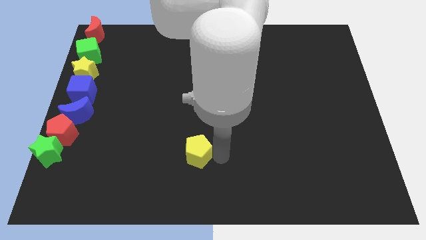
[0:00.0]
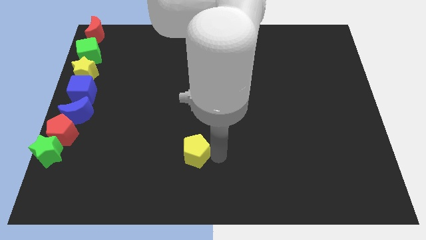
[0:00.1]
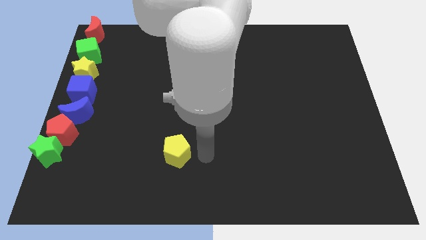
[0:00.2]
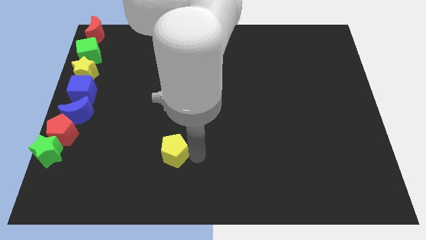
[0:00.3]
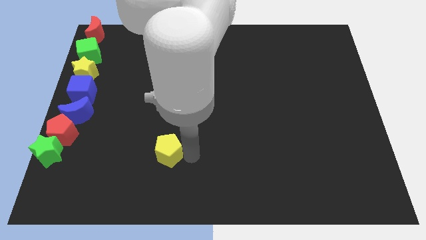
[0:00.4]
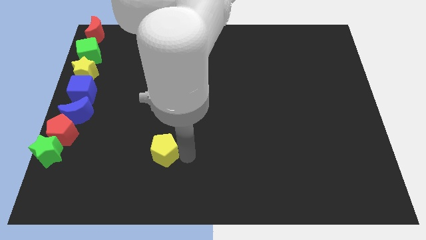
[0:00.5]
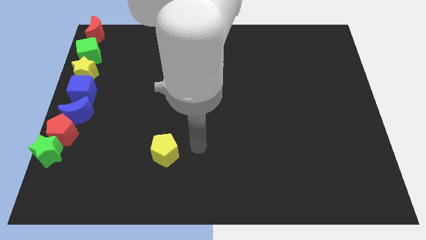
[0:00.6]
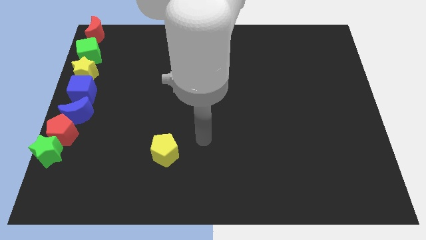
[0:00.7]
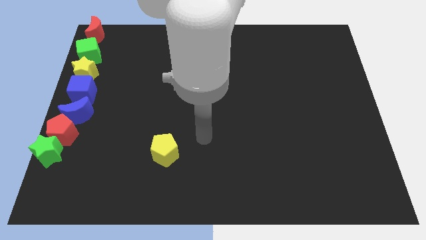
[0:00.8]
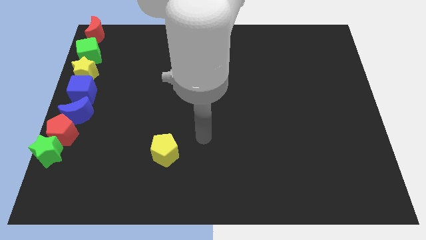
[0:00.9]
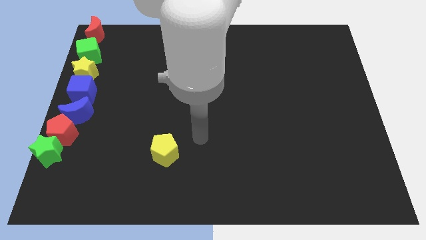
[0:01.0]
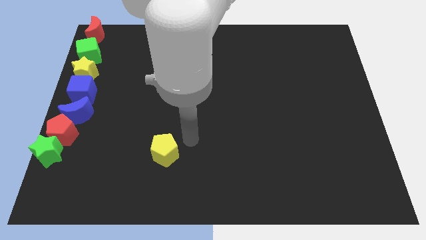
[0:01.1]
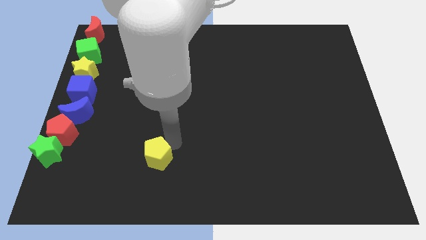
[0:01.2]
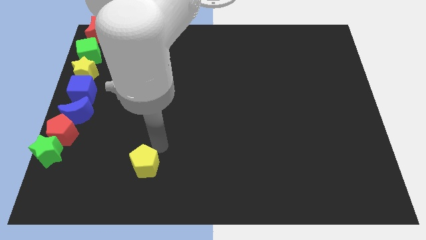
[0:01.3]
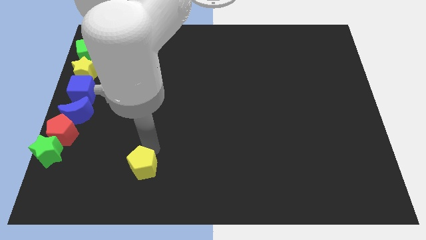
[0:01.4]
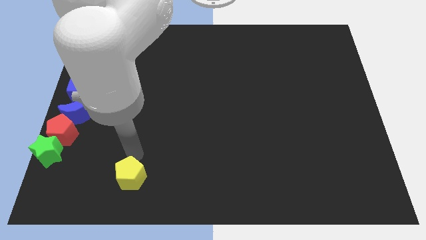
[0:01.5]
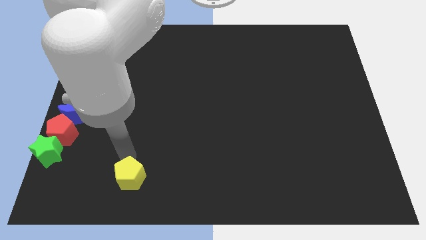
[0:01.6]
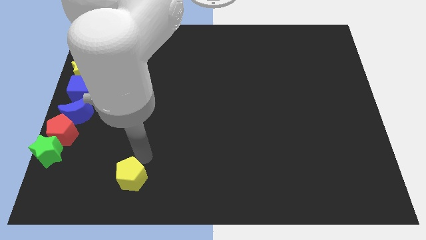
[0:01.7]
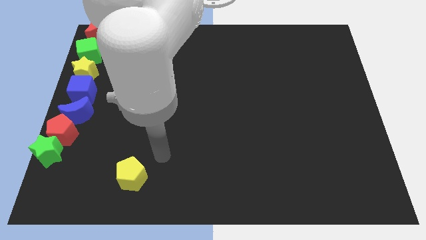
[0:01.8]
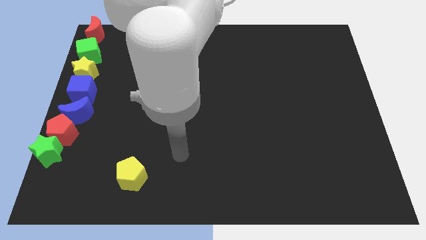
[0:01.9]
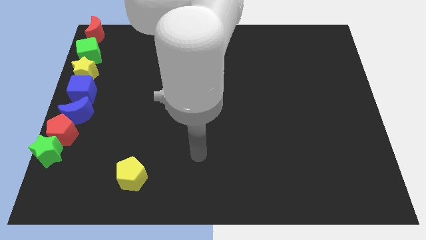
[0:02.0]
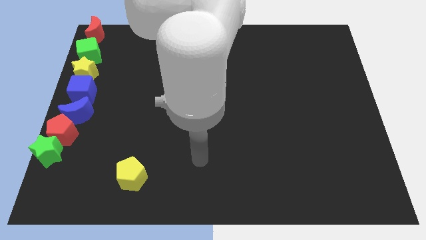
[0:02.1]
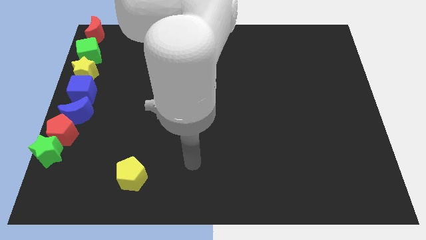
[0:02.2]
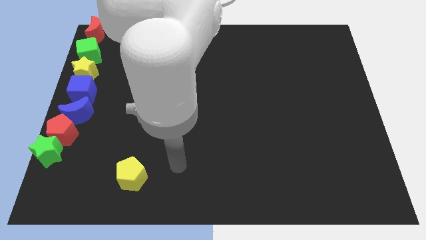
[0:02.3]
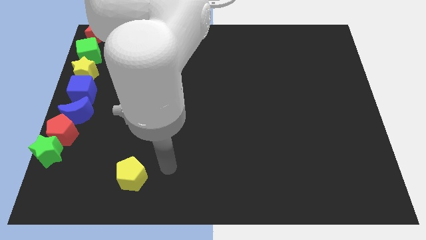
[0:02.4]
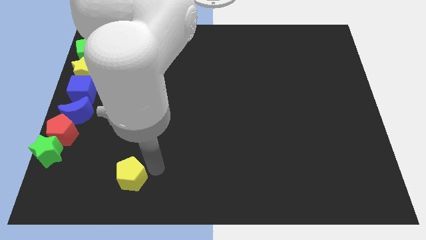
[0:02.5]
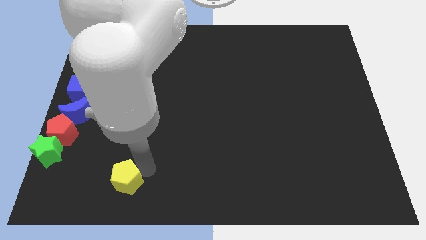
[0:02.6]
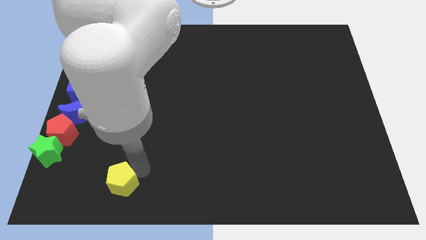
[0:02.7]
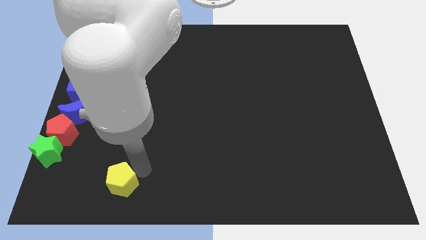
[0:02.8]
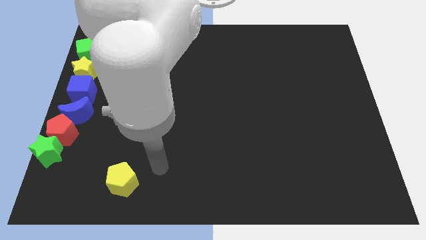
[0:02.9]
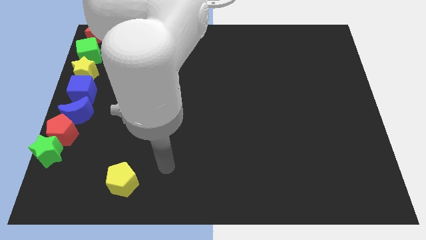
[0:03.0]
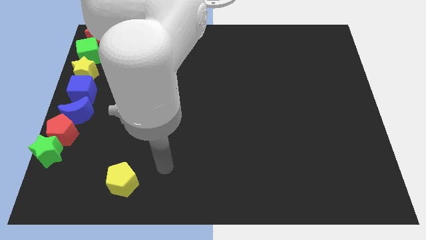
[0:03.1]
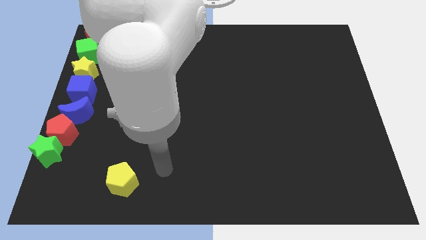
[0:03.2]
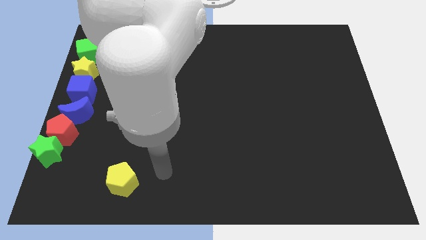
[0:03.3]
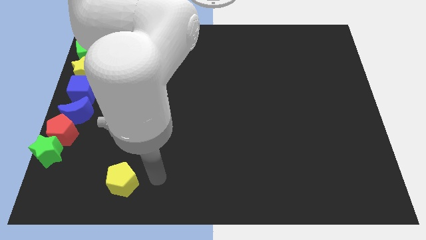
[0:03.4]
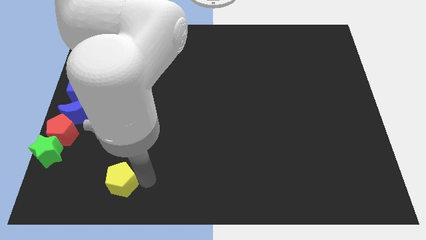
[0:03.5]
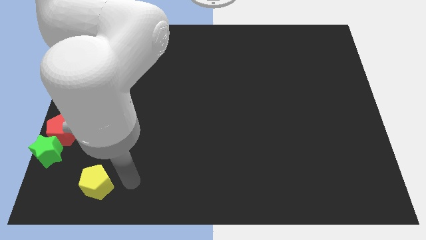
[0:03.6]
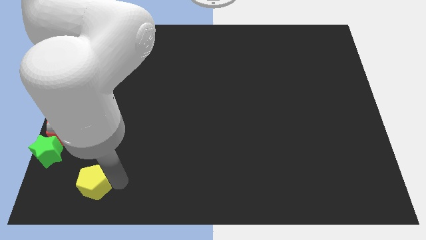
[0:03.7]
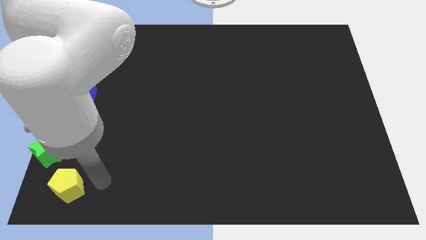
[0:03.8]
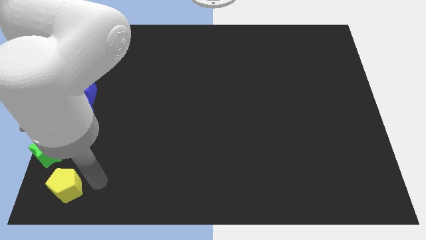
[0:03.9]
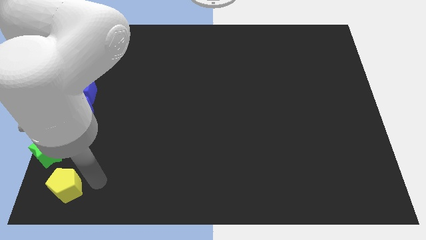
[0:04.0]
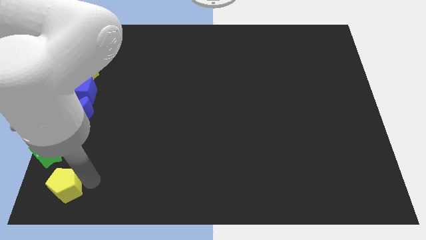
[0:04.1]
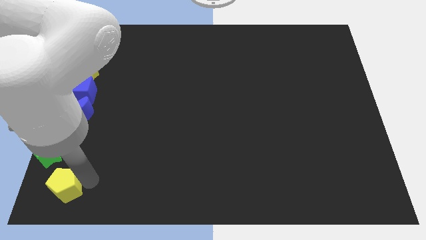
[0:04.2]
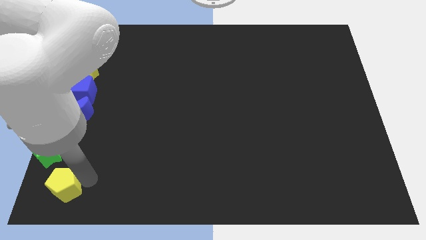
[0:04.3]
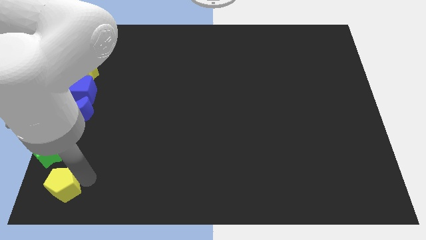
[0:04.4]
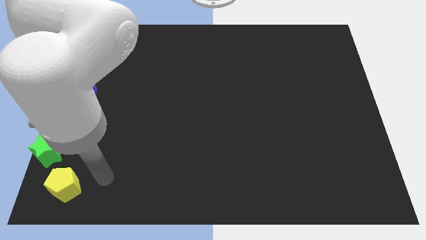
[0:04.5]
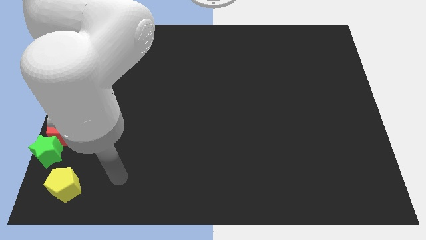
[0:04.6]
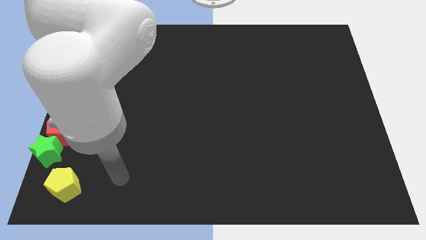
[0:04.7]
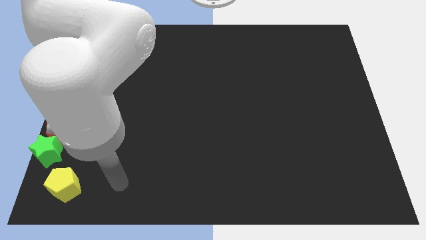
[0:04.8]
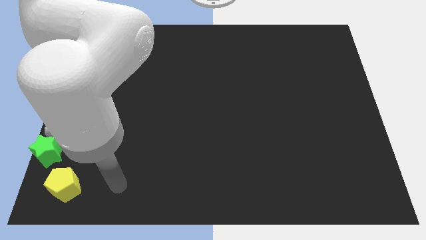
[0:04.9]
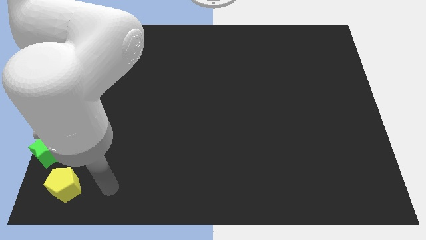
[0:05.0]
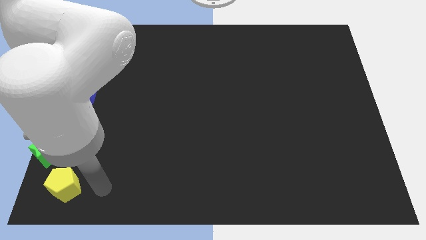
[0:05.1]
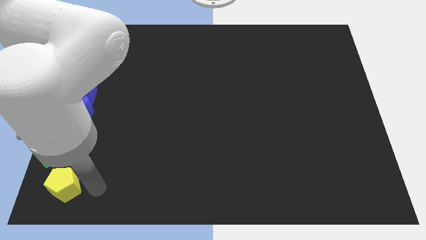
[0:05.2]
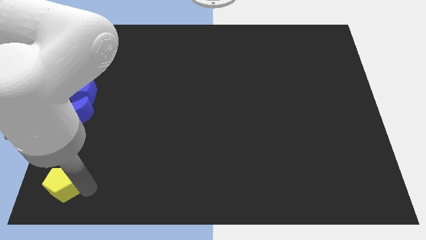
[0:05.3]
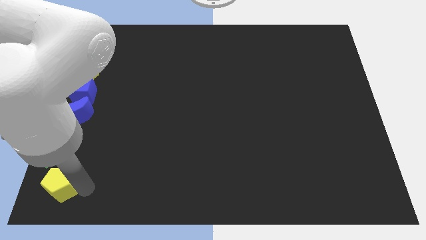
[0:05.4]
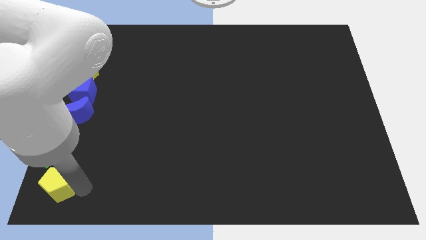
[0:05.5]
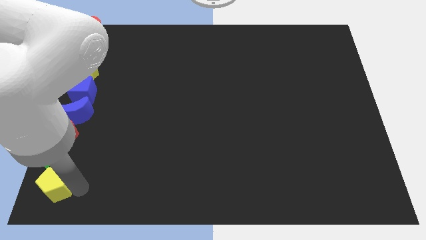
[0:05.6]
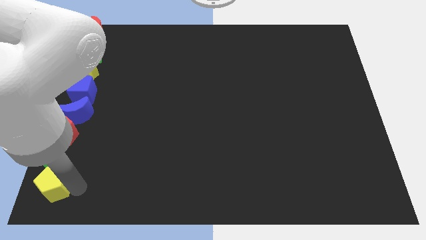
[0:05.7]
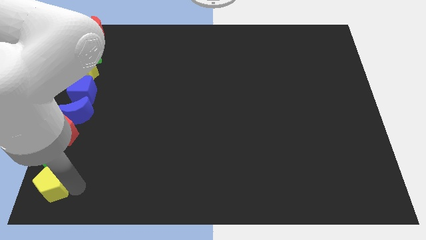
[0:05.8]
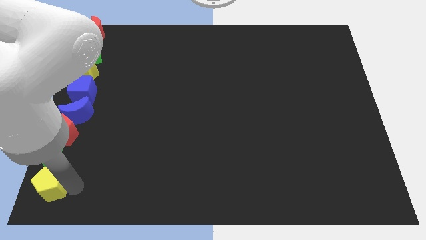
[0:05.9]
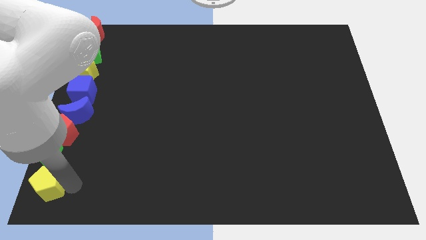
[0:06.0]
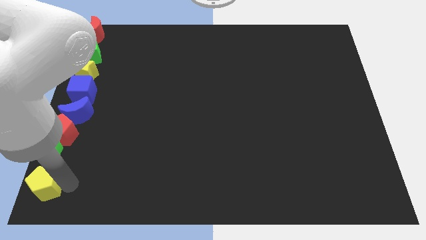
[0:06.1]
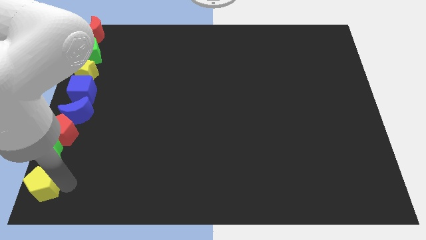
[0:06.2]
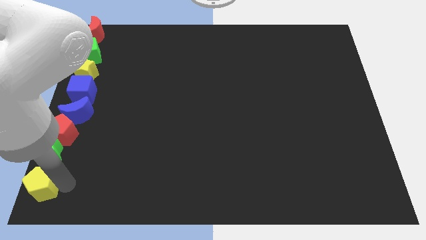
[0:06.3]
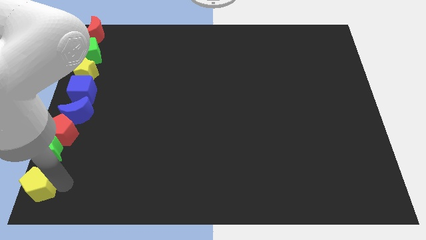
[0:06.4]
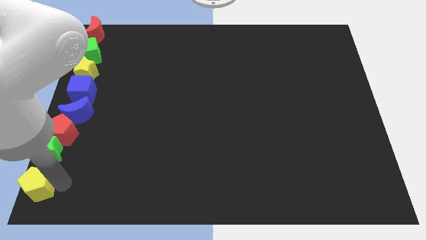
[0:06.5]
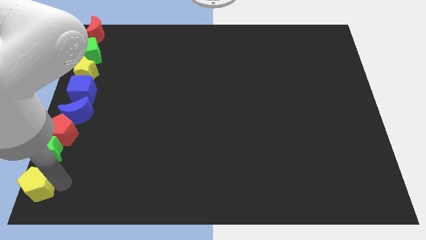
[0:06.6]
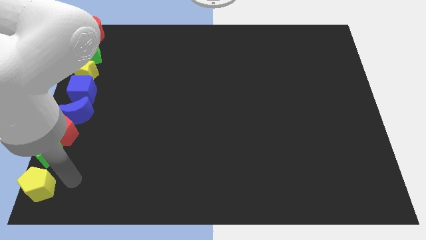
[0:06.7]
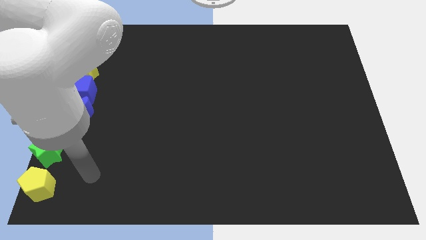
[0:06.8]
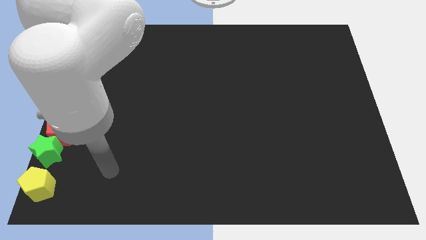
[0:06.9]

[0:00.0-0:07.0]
put the yellow pentagon underneath the green star

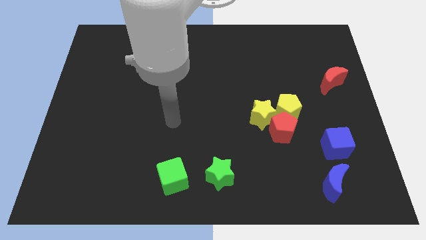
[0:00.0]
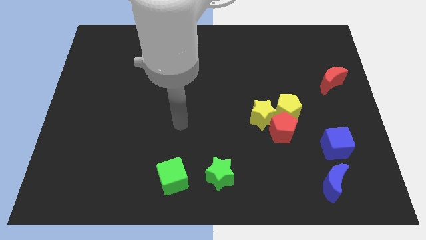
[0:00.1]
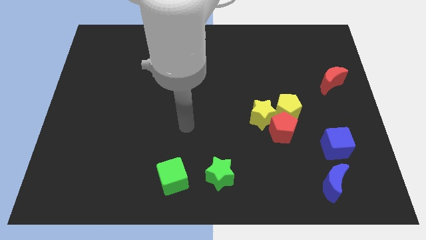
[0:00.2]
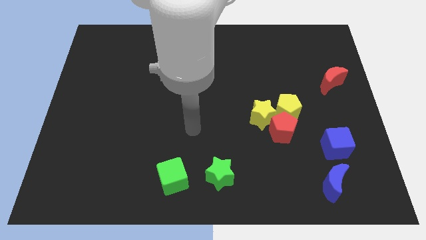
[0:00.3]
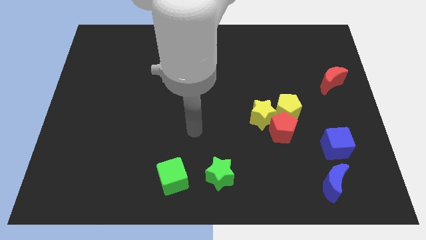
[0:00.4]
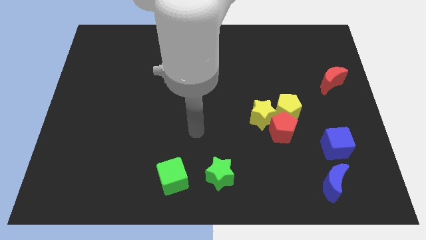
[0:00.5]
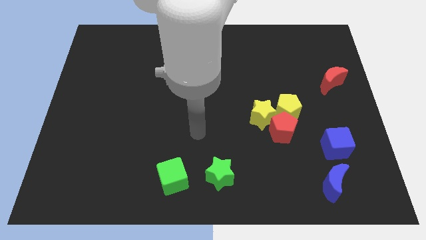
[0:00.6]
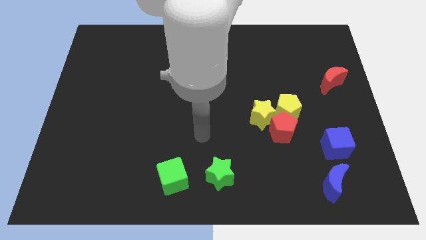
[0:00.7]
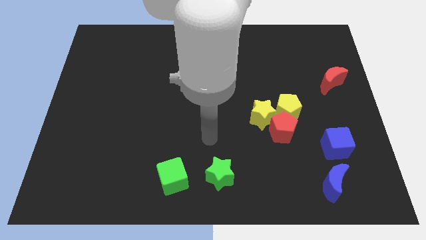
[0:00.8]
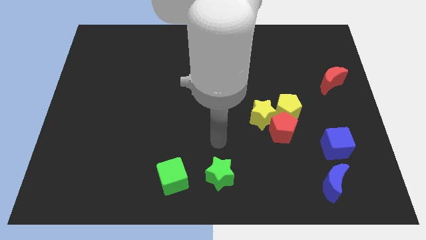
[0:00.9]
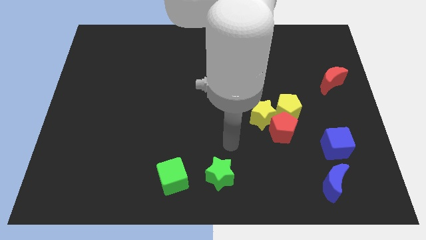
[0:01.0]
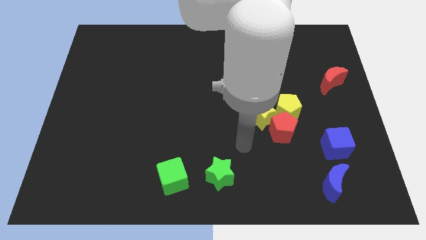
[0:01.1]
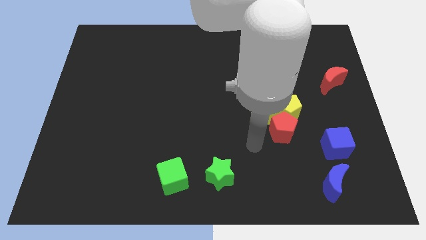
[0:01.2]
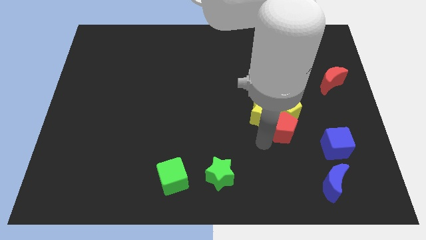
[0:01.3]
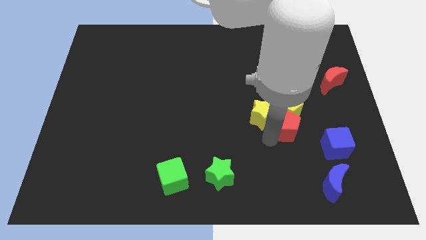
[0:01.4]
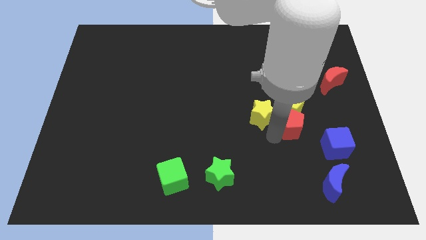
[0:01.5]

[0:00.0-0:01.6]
touch the red pentagon

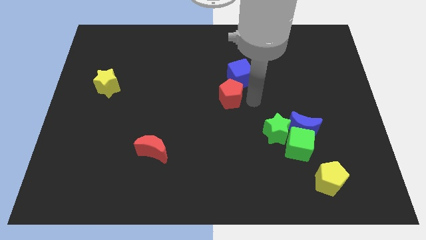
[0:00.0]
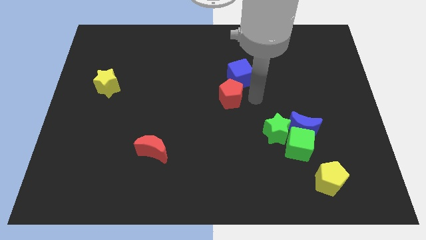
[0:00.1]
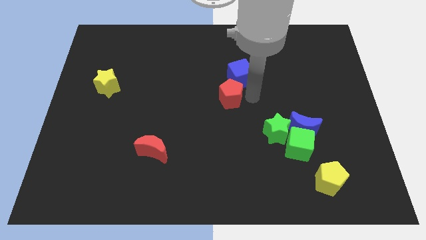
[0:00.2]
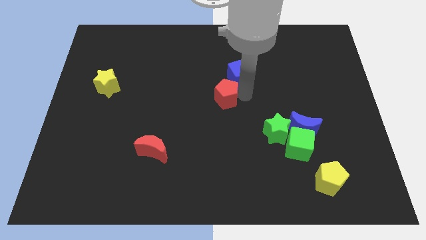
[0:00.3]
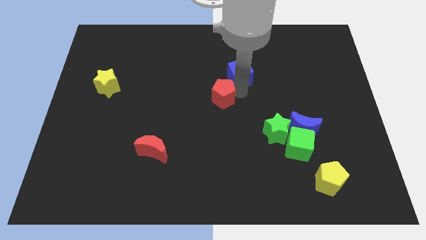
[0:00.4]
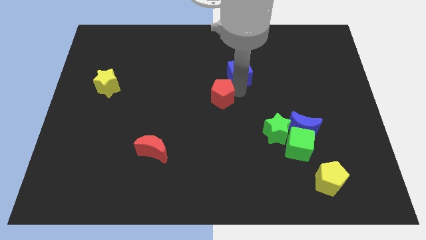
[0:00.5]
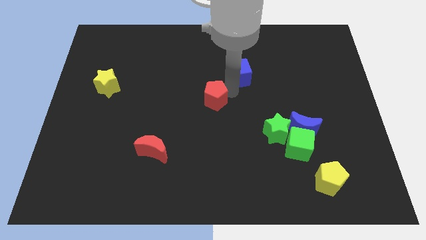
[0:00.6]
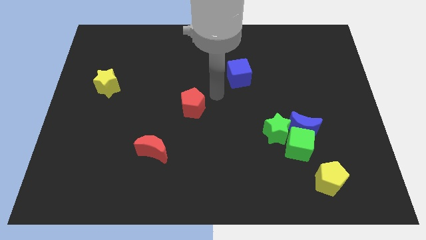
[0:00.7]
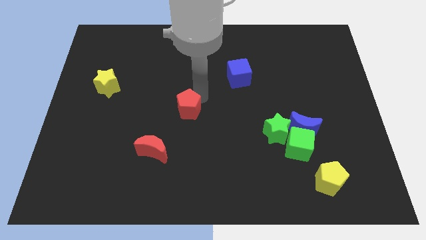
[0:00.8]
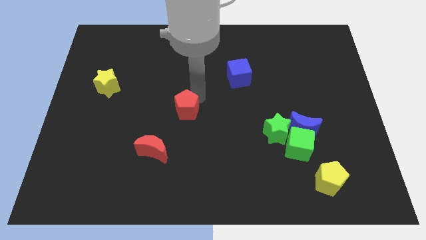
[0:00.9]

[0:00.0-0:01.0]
push the red pentagon to the top right of the red crescent
